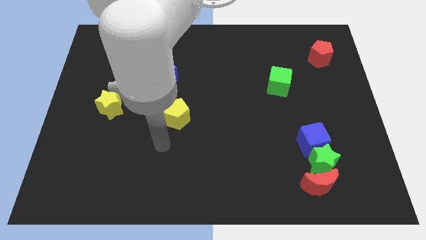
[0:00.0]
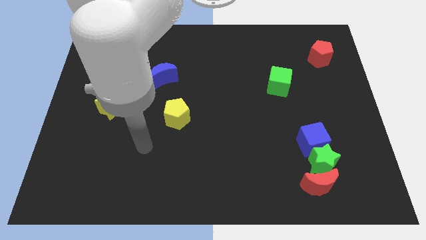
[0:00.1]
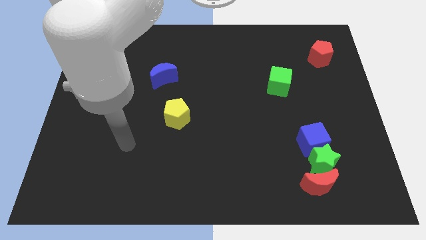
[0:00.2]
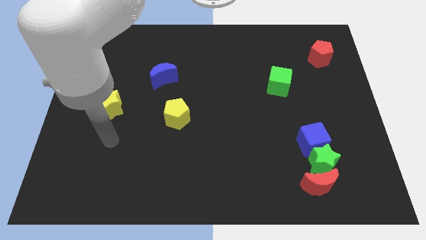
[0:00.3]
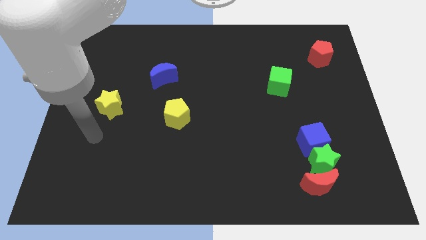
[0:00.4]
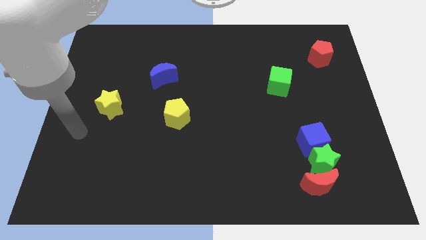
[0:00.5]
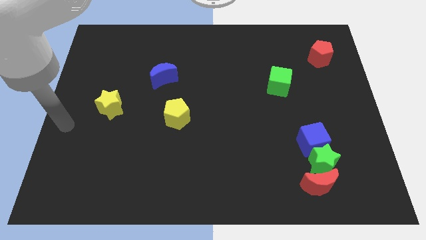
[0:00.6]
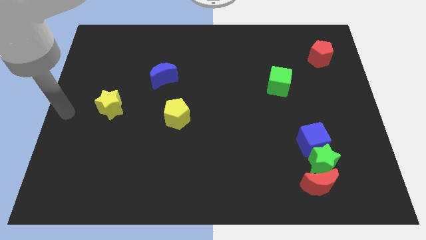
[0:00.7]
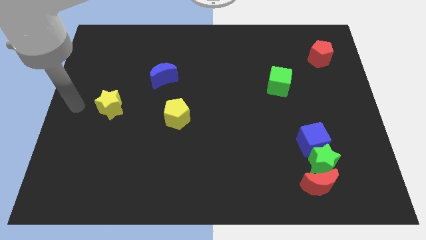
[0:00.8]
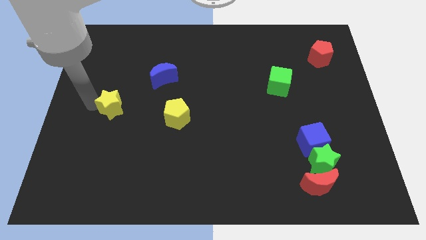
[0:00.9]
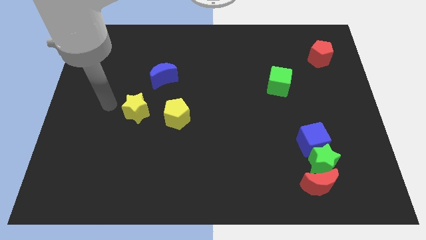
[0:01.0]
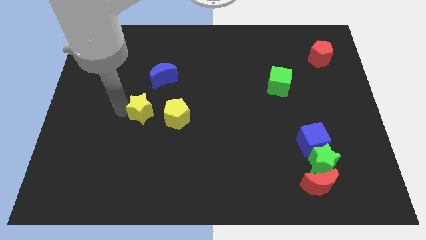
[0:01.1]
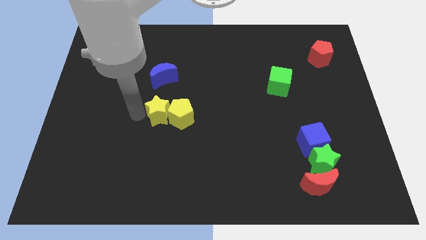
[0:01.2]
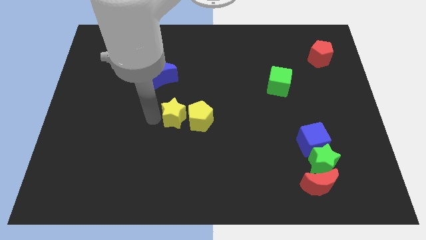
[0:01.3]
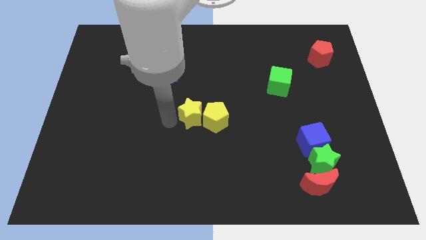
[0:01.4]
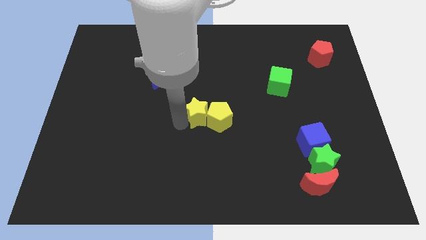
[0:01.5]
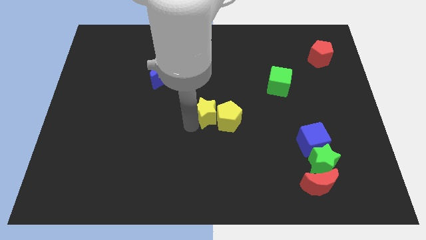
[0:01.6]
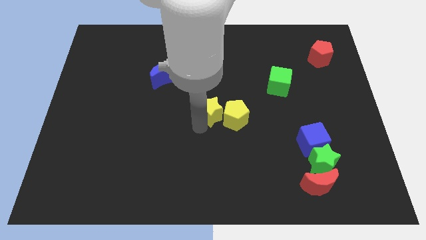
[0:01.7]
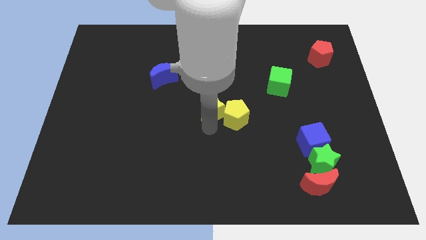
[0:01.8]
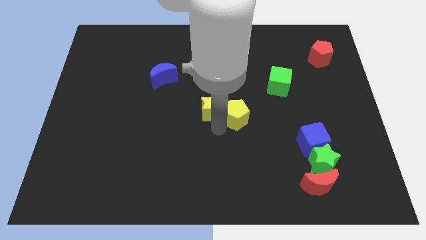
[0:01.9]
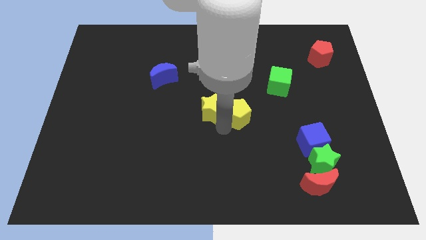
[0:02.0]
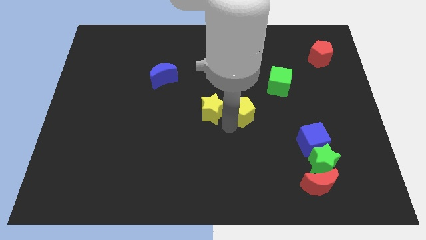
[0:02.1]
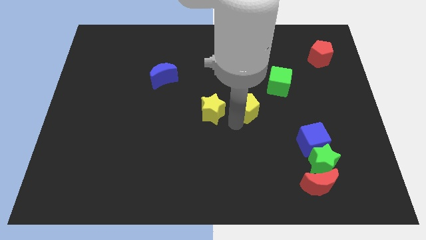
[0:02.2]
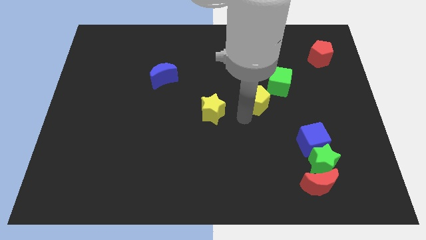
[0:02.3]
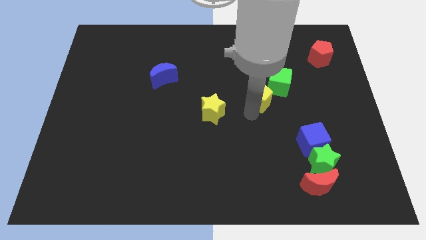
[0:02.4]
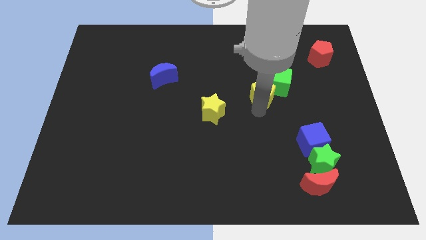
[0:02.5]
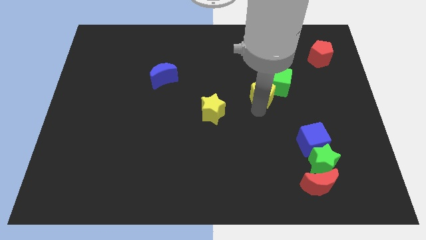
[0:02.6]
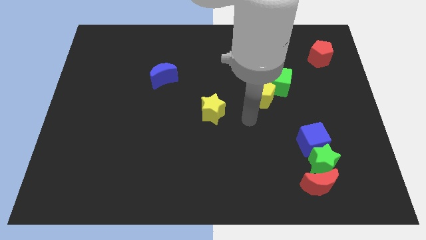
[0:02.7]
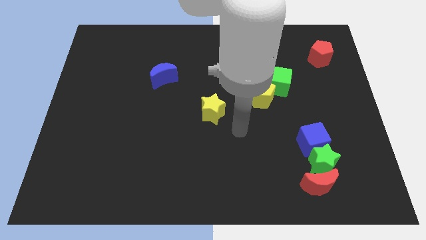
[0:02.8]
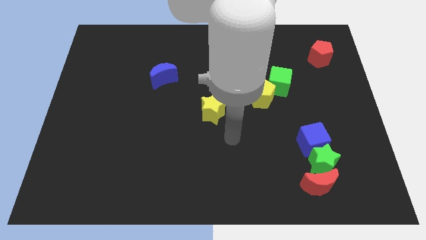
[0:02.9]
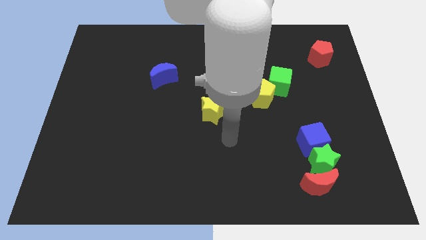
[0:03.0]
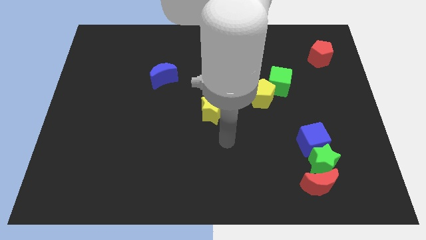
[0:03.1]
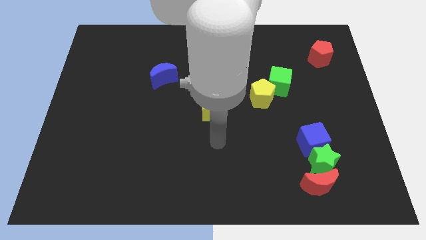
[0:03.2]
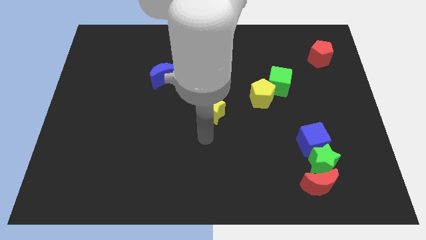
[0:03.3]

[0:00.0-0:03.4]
place the yellow pentagon below the green cube

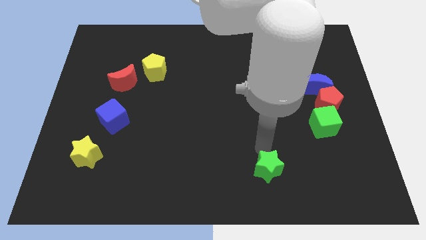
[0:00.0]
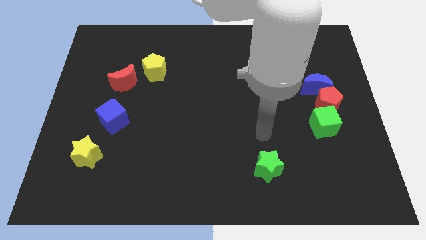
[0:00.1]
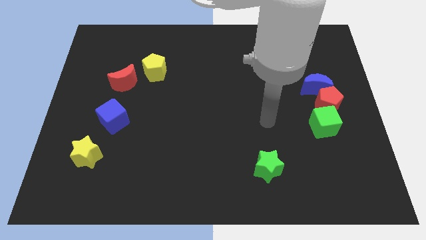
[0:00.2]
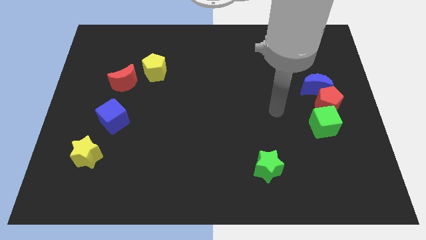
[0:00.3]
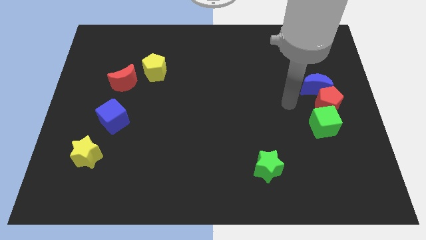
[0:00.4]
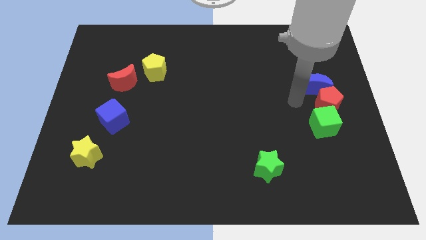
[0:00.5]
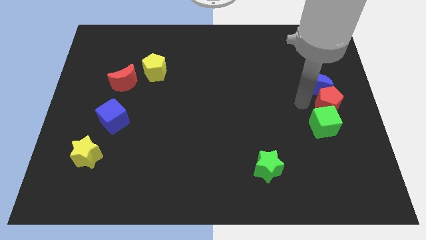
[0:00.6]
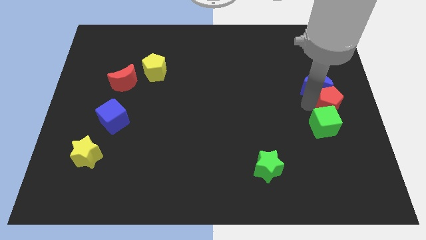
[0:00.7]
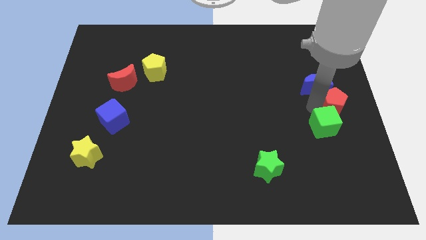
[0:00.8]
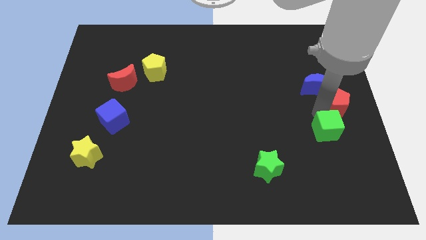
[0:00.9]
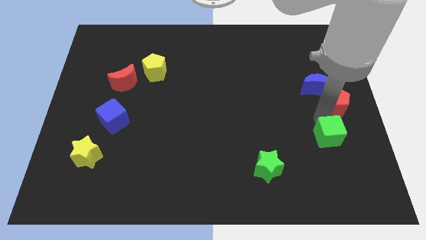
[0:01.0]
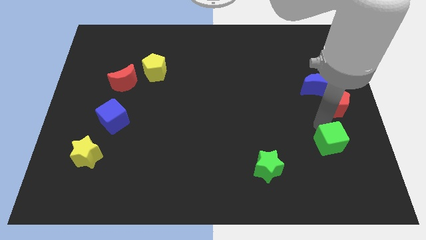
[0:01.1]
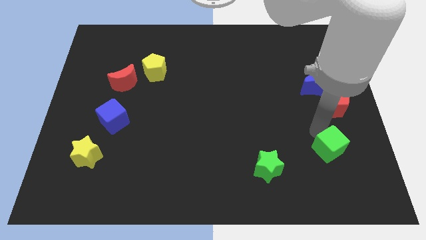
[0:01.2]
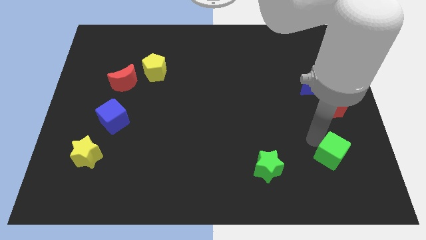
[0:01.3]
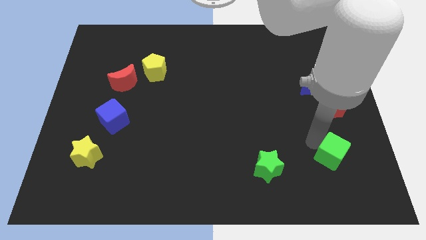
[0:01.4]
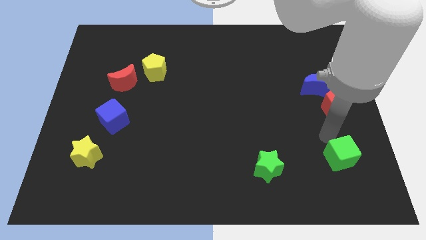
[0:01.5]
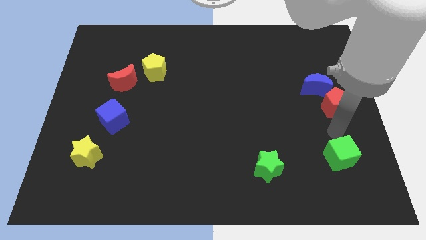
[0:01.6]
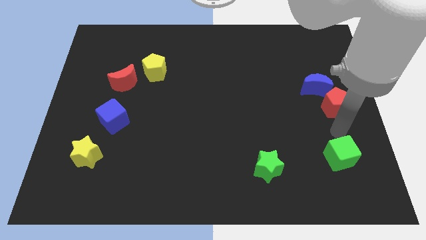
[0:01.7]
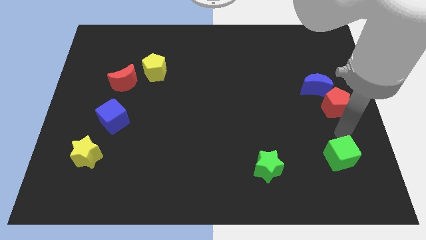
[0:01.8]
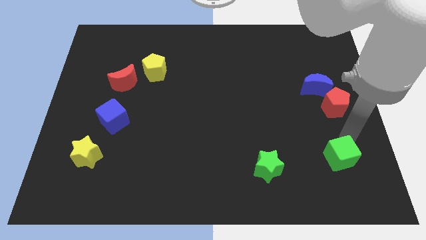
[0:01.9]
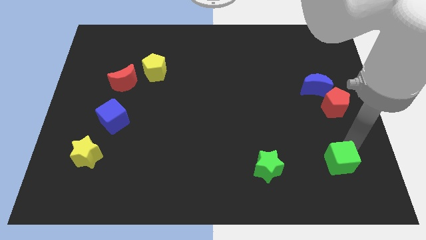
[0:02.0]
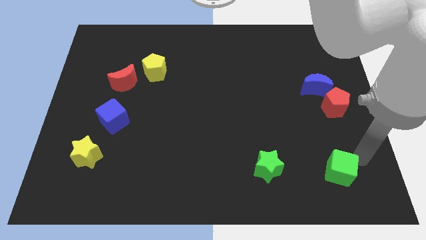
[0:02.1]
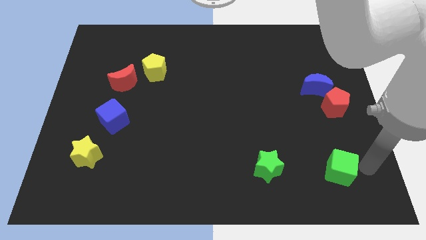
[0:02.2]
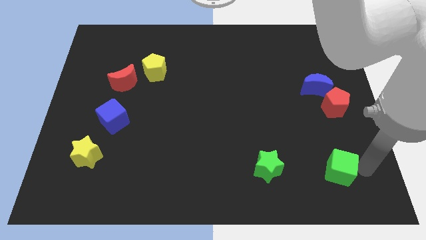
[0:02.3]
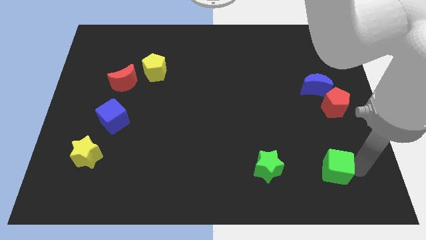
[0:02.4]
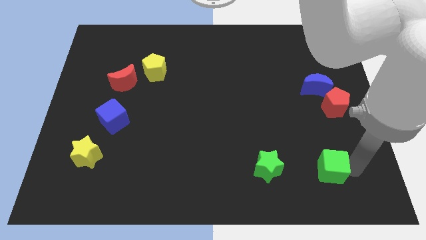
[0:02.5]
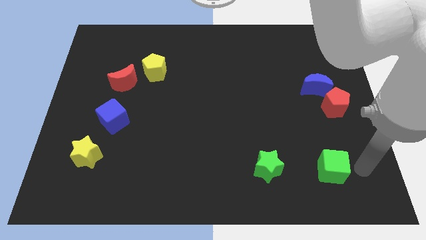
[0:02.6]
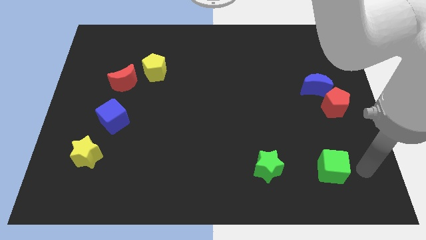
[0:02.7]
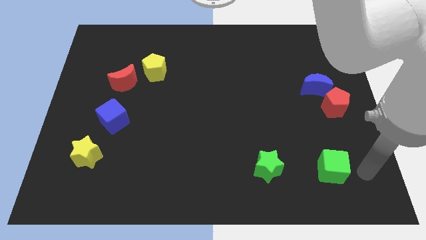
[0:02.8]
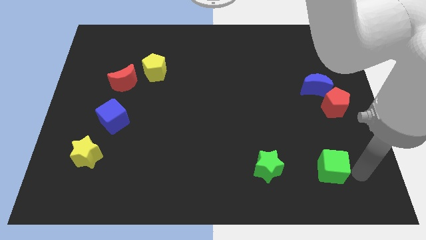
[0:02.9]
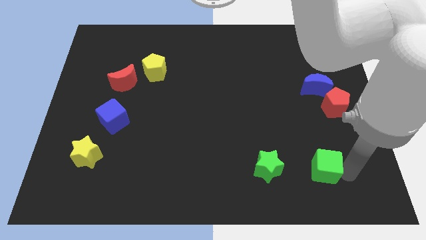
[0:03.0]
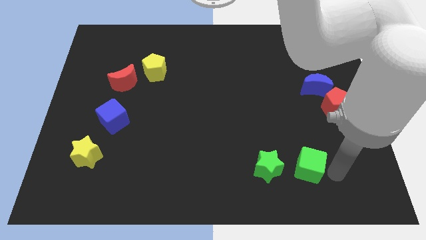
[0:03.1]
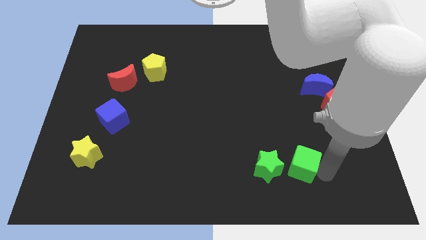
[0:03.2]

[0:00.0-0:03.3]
slide the green cube towards the right side of the green star

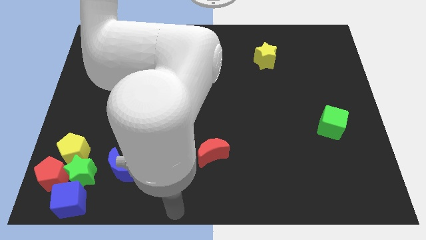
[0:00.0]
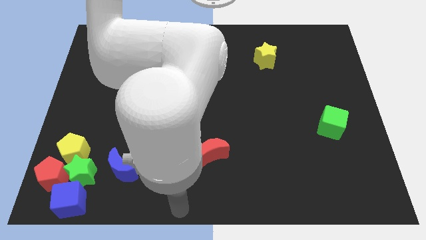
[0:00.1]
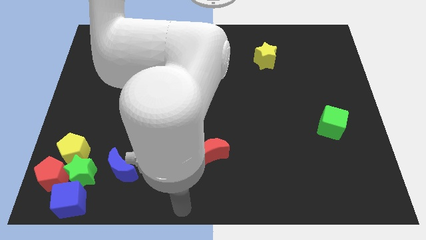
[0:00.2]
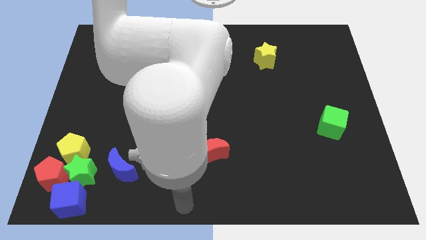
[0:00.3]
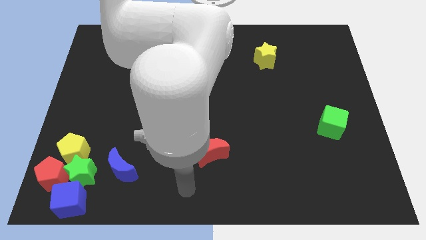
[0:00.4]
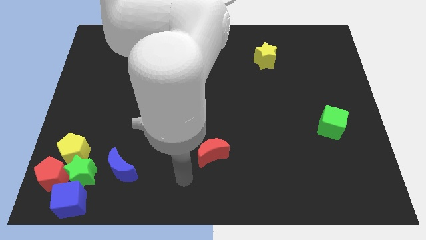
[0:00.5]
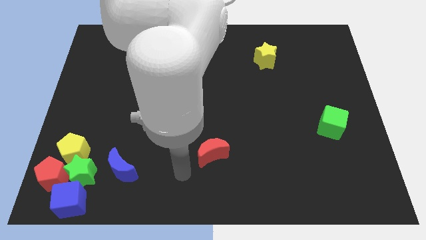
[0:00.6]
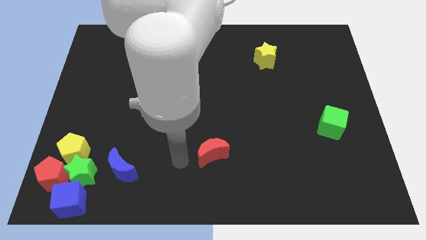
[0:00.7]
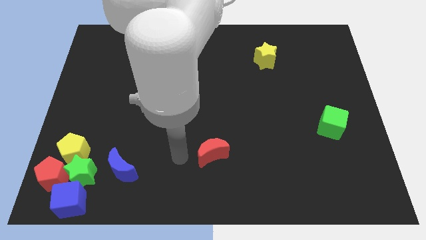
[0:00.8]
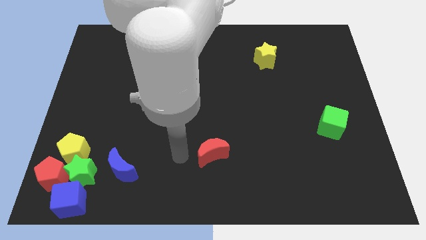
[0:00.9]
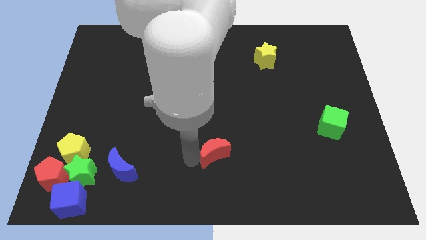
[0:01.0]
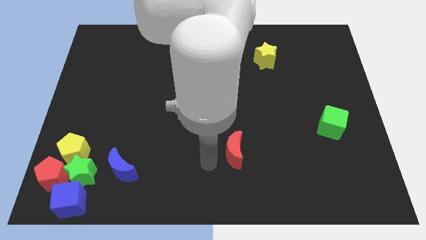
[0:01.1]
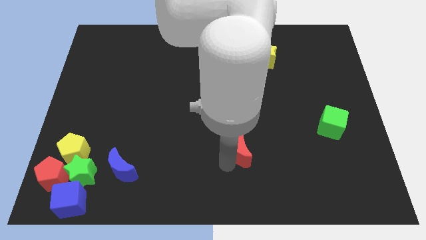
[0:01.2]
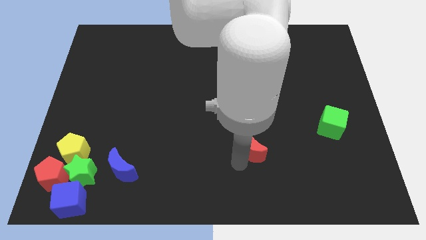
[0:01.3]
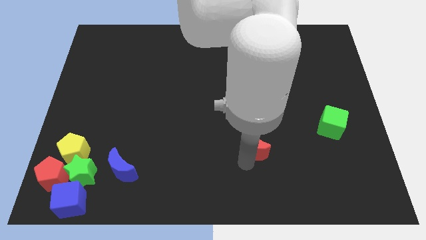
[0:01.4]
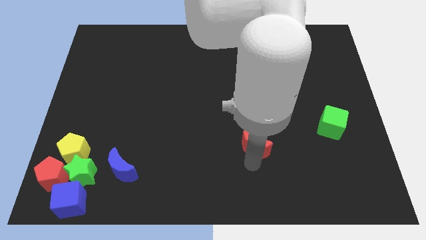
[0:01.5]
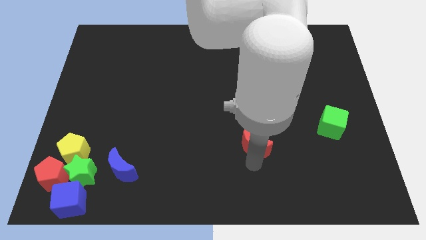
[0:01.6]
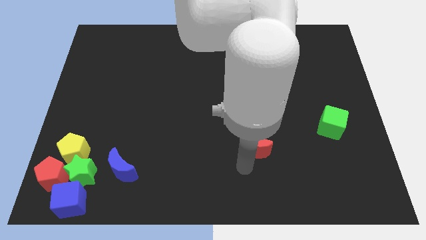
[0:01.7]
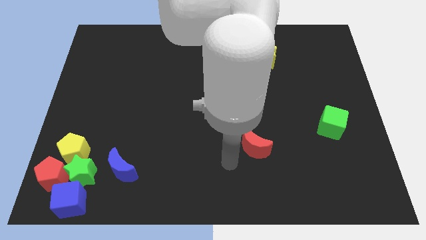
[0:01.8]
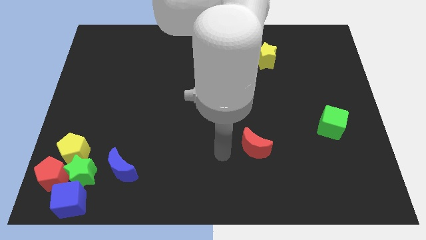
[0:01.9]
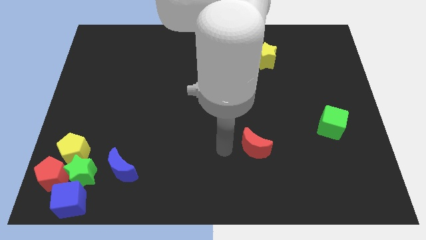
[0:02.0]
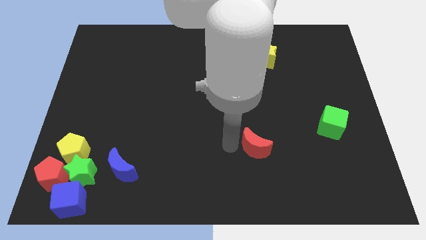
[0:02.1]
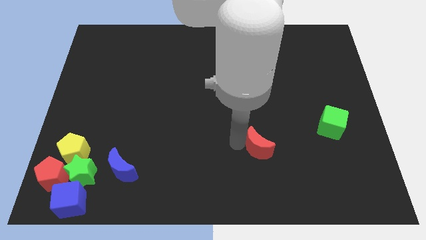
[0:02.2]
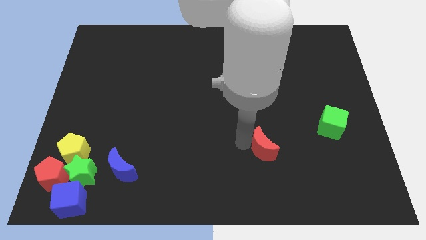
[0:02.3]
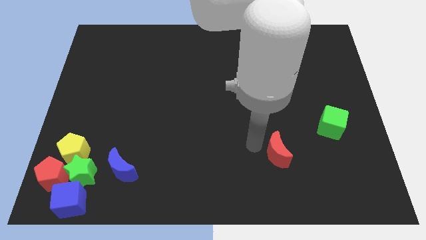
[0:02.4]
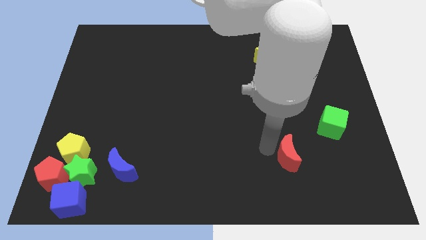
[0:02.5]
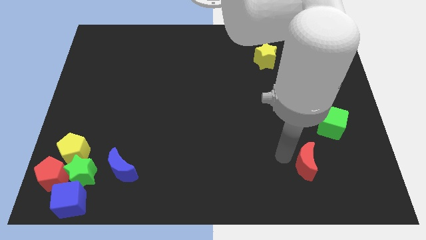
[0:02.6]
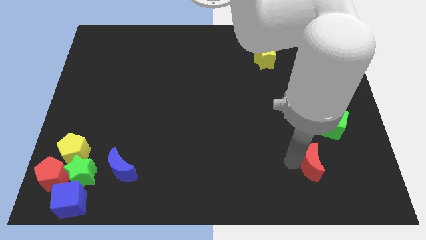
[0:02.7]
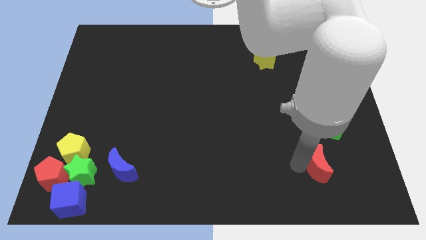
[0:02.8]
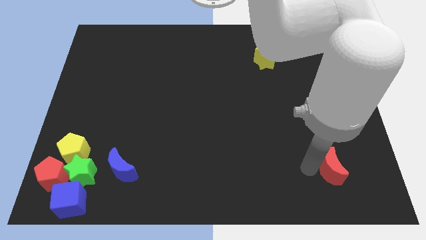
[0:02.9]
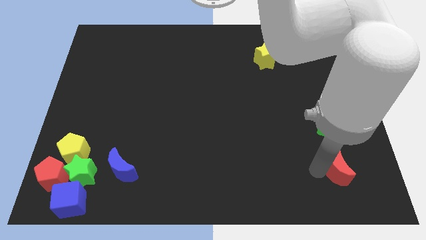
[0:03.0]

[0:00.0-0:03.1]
move the red moon down to the green cube
